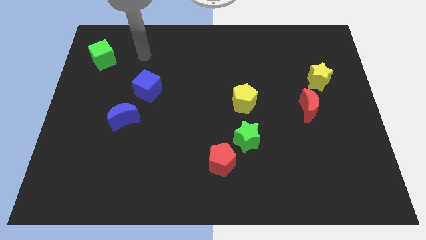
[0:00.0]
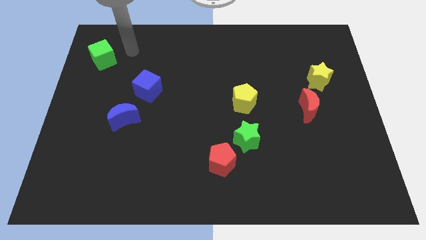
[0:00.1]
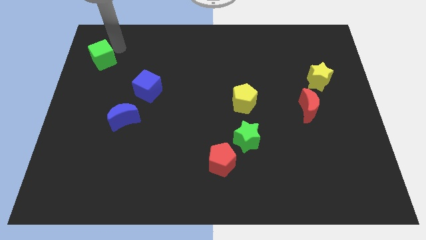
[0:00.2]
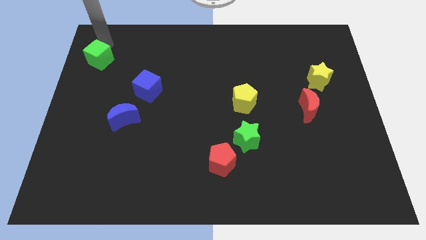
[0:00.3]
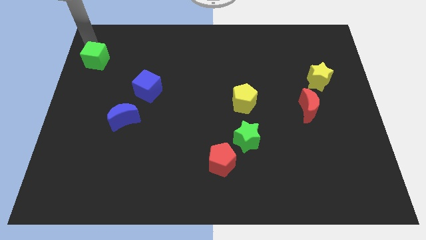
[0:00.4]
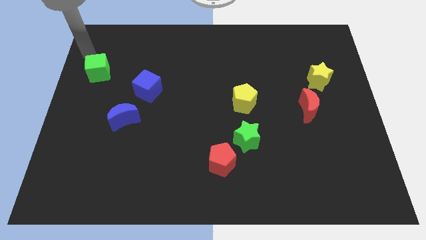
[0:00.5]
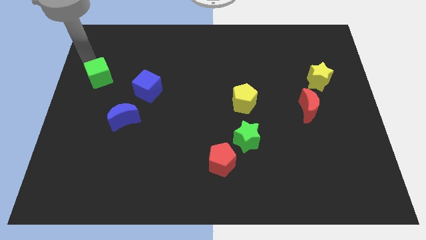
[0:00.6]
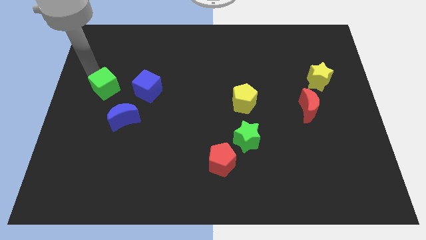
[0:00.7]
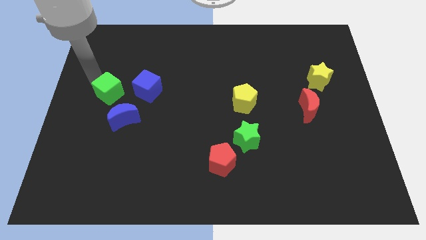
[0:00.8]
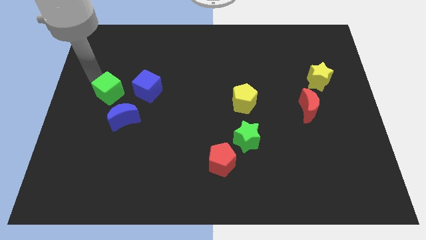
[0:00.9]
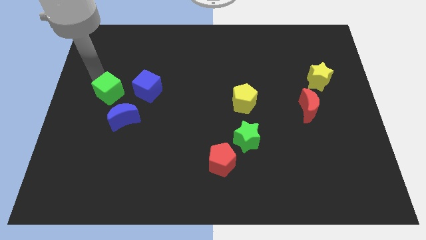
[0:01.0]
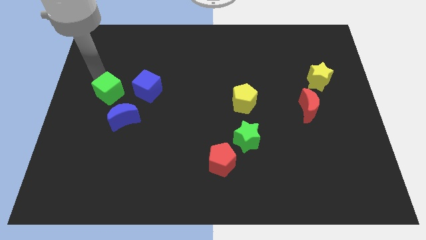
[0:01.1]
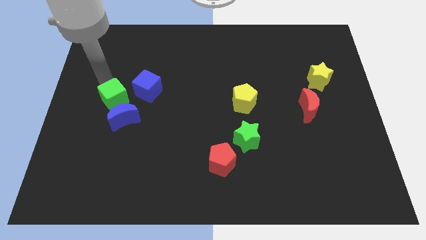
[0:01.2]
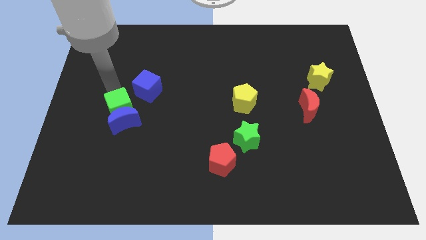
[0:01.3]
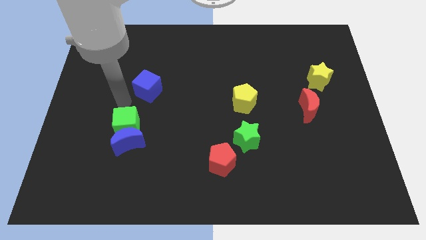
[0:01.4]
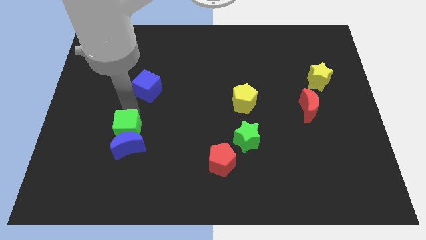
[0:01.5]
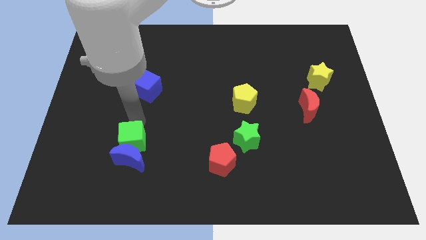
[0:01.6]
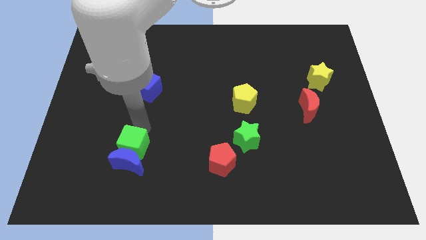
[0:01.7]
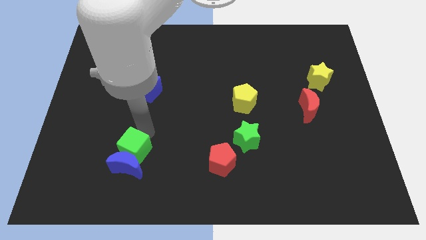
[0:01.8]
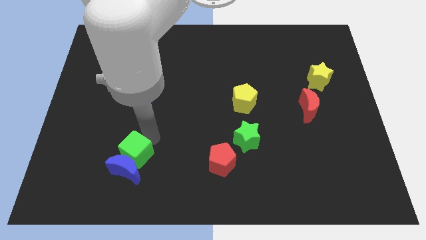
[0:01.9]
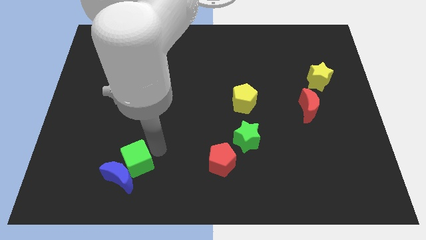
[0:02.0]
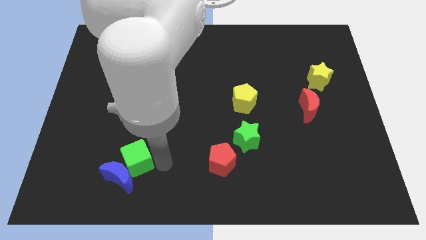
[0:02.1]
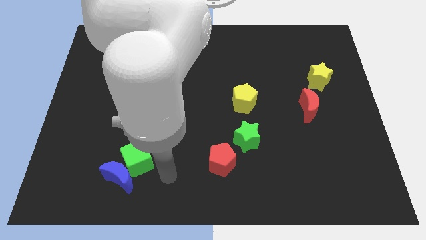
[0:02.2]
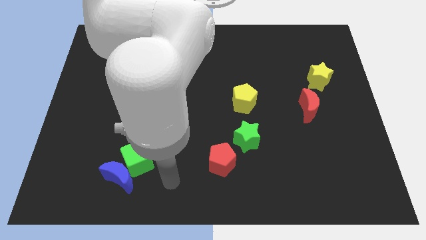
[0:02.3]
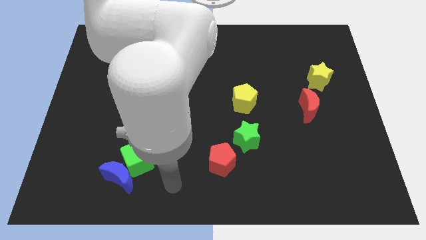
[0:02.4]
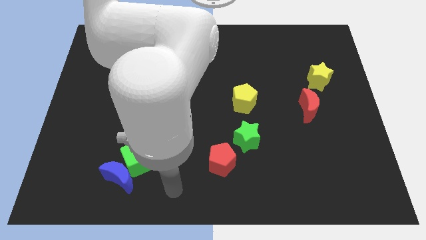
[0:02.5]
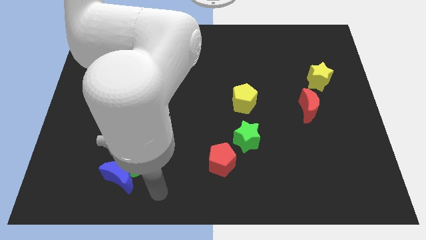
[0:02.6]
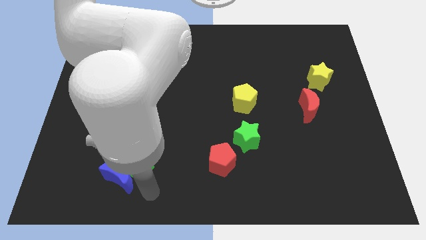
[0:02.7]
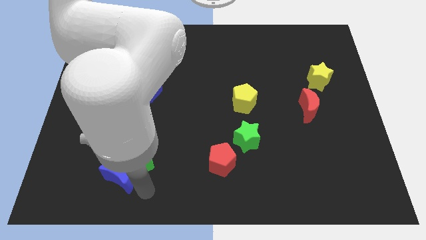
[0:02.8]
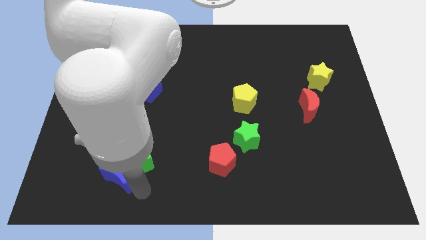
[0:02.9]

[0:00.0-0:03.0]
push the green cube to the center bottom

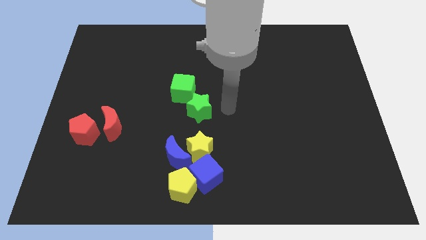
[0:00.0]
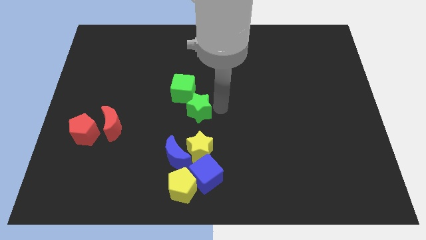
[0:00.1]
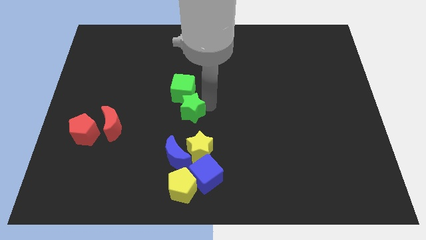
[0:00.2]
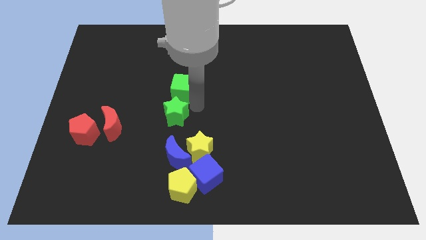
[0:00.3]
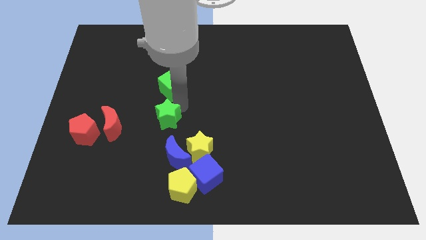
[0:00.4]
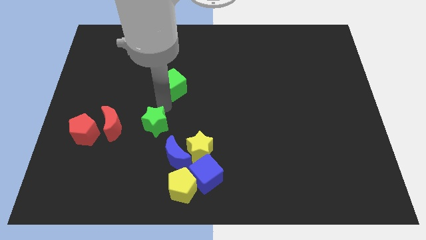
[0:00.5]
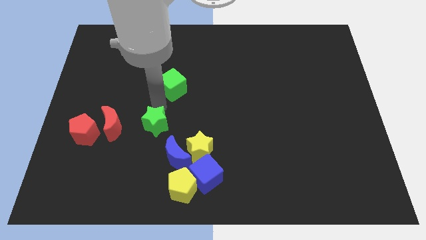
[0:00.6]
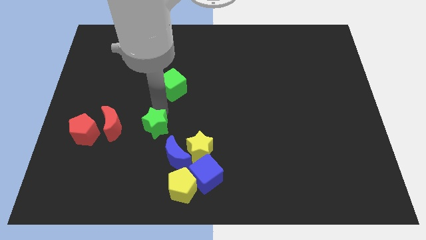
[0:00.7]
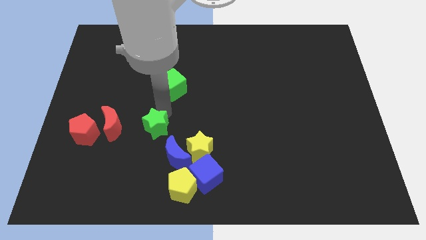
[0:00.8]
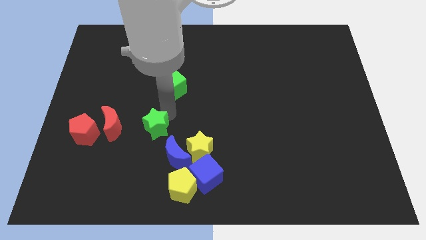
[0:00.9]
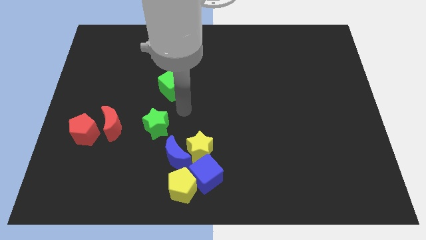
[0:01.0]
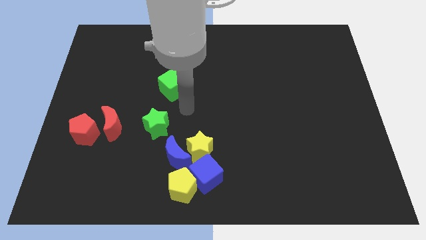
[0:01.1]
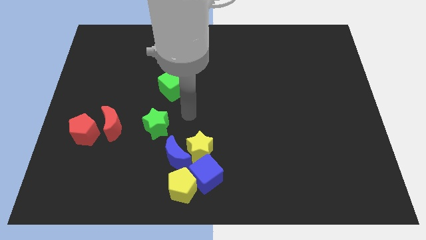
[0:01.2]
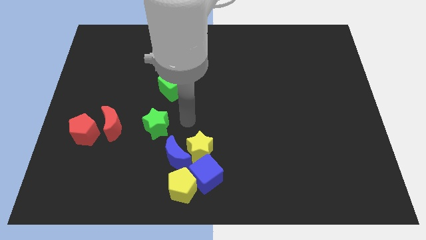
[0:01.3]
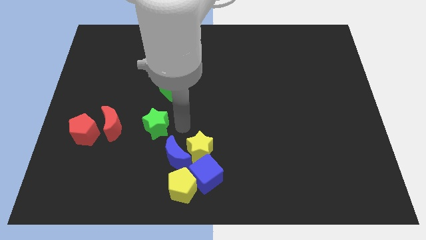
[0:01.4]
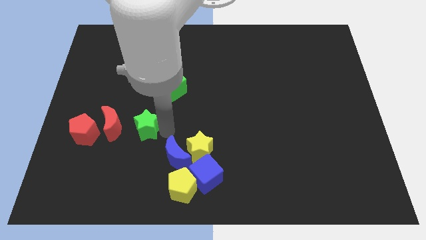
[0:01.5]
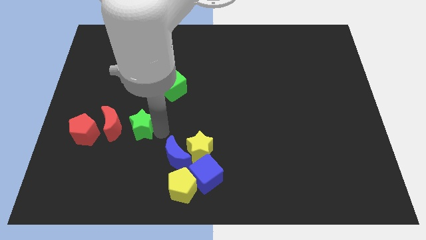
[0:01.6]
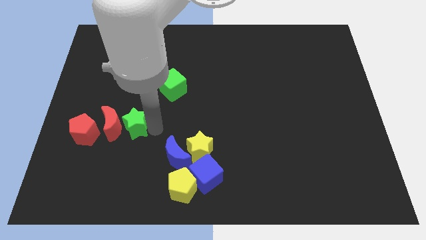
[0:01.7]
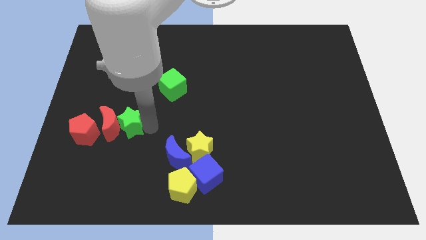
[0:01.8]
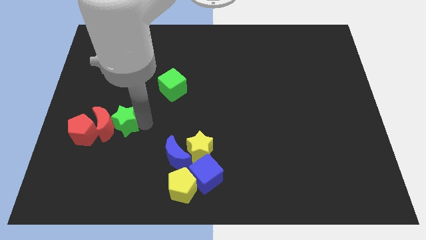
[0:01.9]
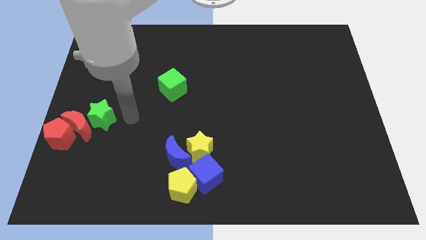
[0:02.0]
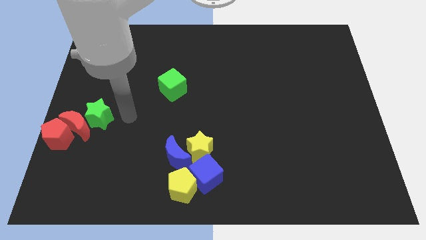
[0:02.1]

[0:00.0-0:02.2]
make the green star to touch the right side of the red crescent

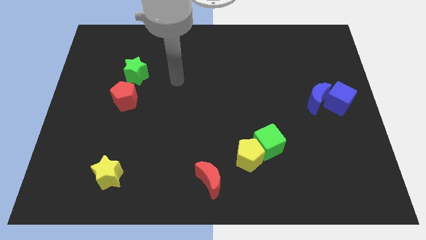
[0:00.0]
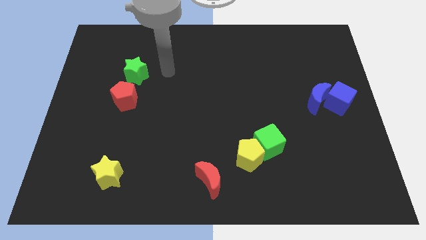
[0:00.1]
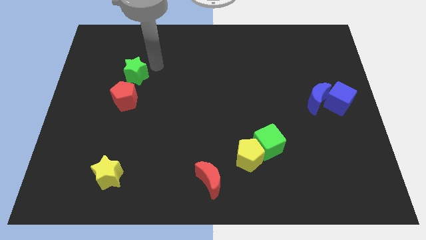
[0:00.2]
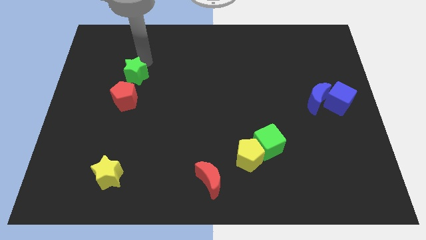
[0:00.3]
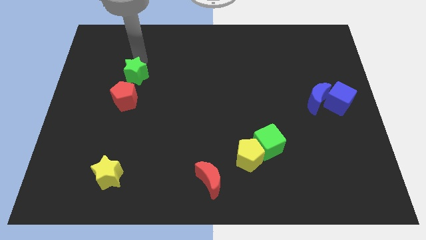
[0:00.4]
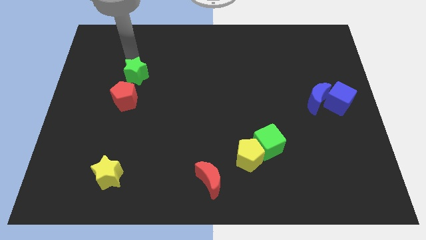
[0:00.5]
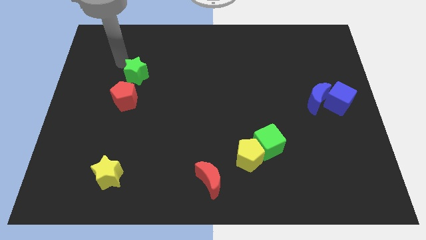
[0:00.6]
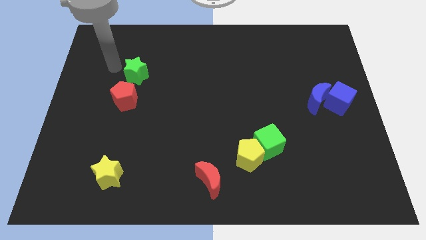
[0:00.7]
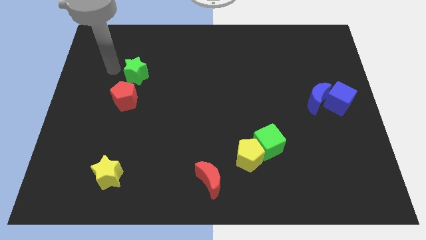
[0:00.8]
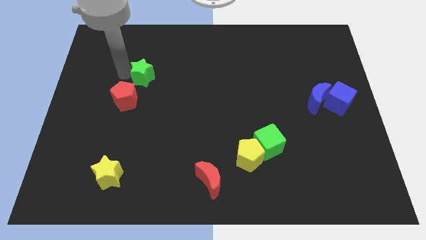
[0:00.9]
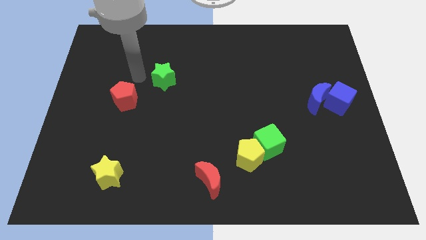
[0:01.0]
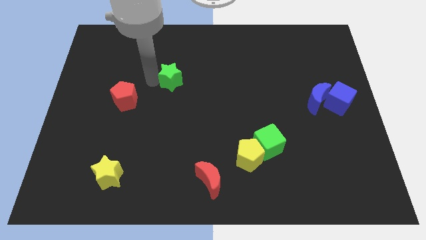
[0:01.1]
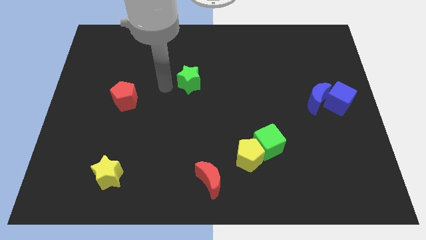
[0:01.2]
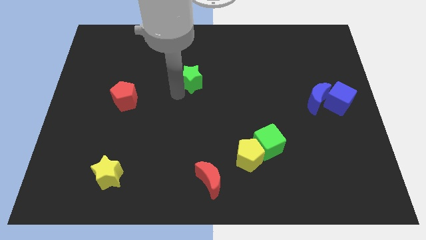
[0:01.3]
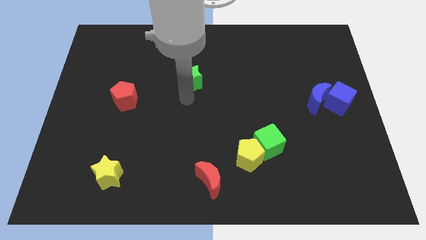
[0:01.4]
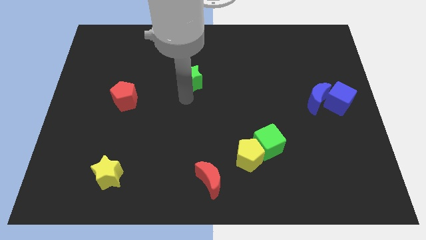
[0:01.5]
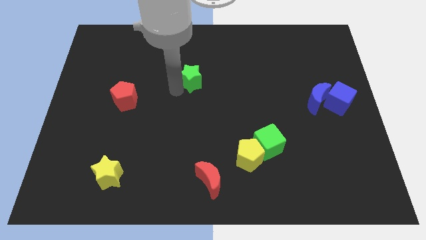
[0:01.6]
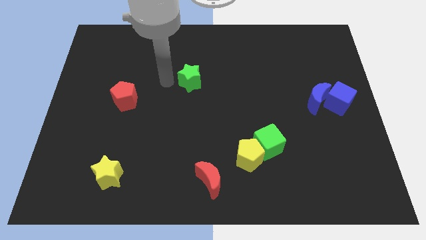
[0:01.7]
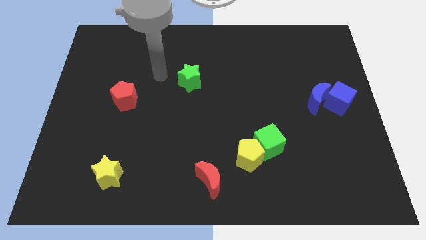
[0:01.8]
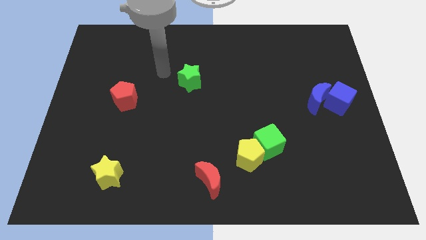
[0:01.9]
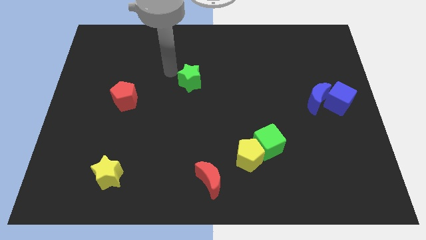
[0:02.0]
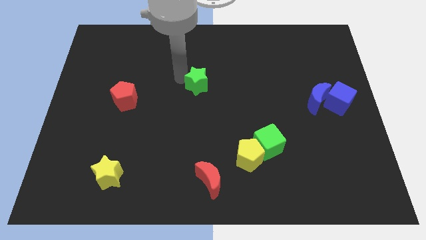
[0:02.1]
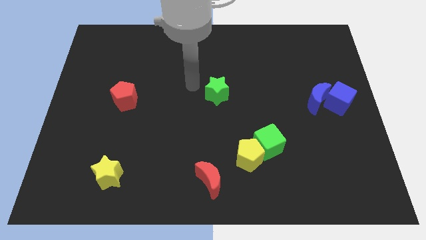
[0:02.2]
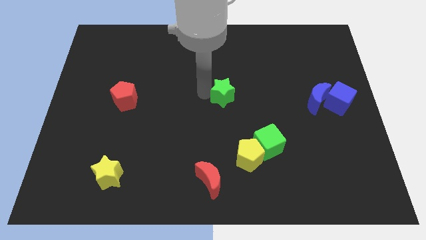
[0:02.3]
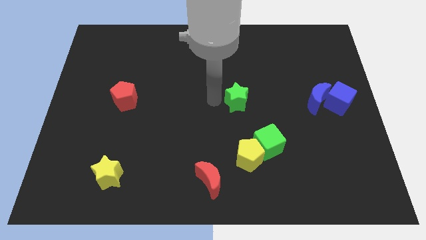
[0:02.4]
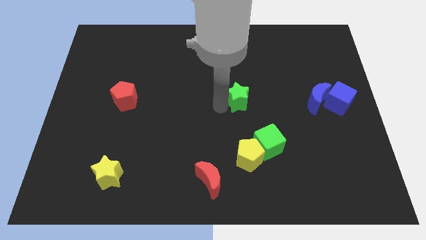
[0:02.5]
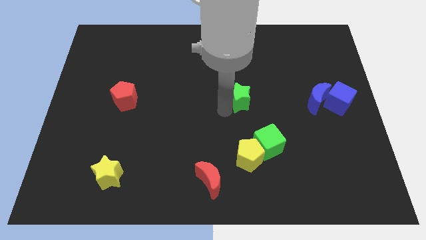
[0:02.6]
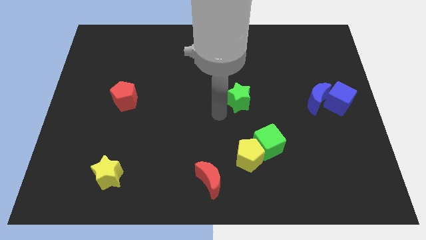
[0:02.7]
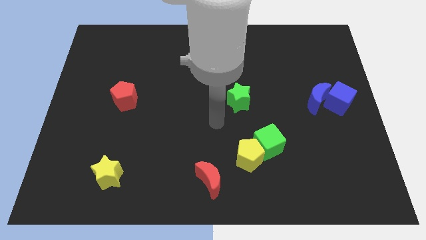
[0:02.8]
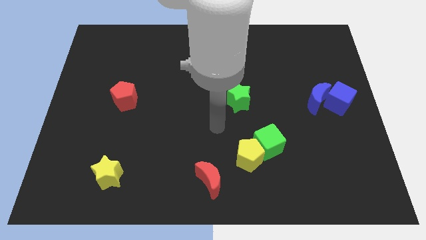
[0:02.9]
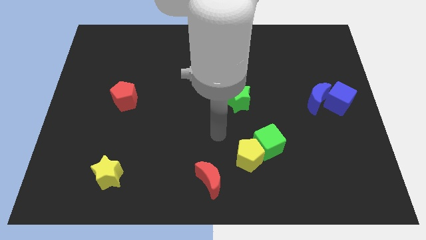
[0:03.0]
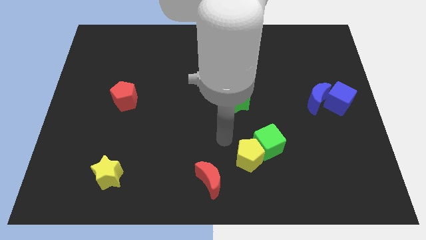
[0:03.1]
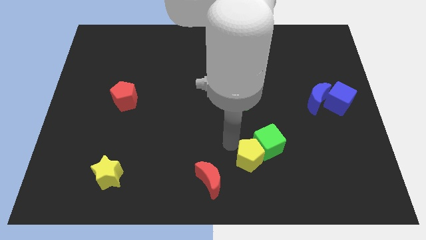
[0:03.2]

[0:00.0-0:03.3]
put the green star vertically above the yellow pentagon

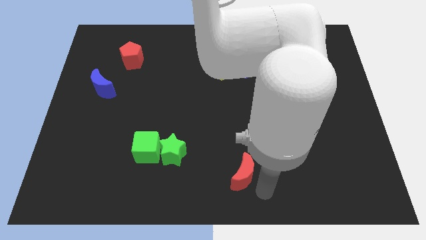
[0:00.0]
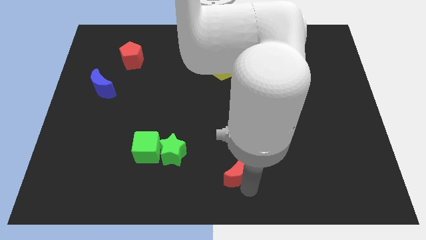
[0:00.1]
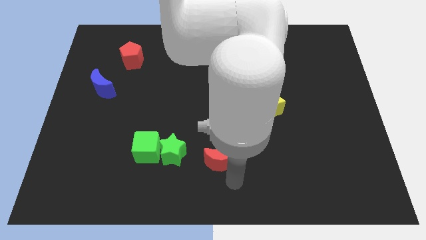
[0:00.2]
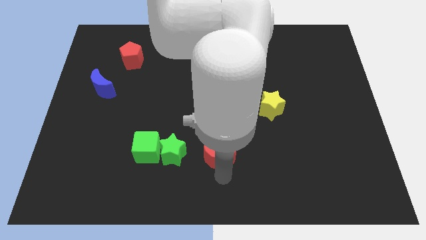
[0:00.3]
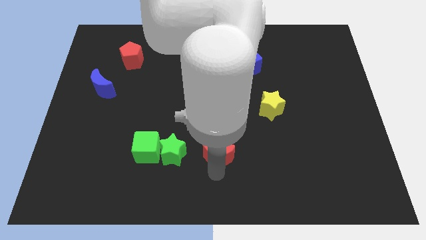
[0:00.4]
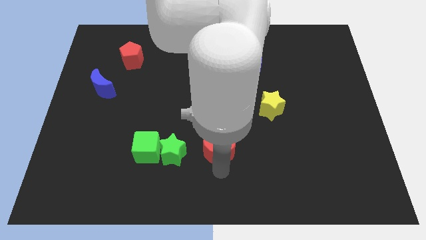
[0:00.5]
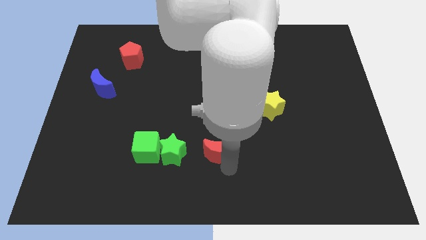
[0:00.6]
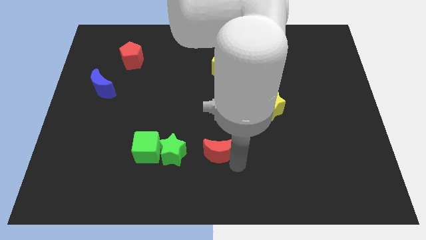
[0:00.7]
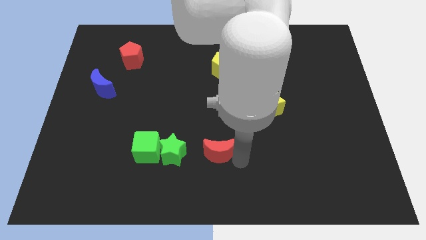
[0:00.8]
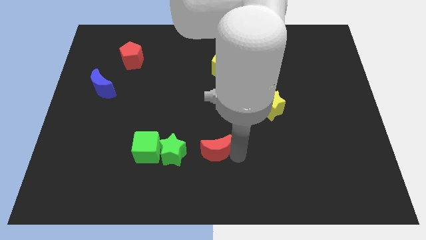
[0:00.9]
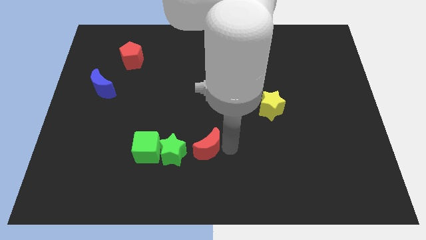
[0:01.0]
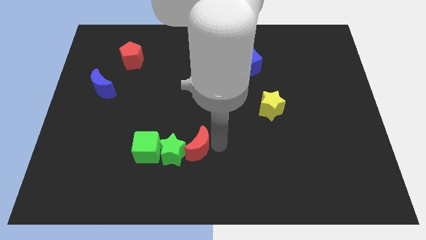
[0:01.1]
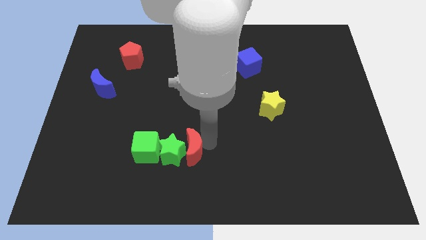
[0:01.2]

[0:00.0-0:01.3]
move the red crescent close to the green star
